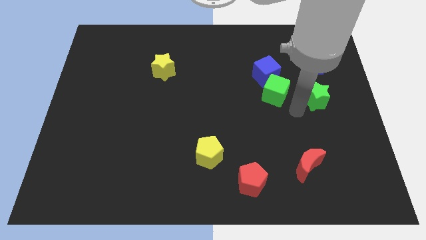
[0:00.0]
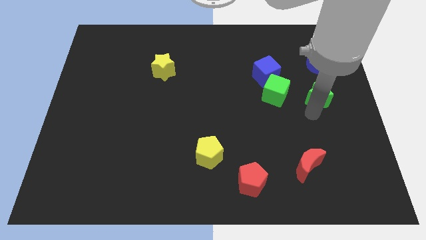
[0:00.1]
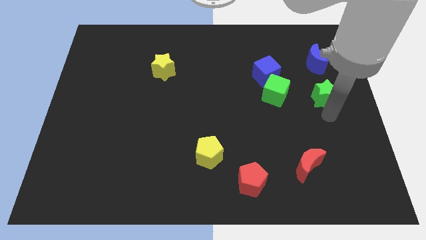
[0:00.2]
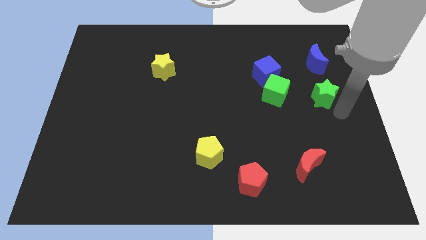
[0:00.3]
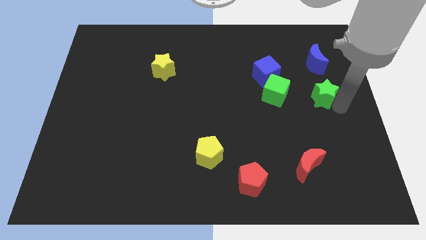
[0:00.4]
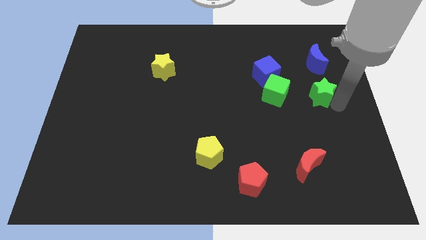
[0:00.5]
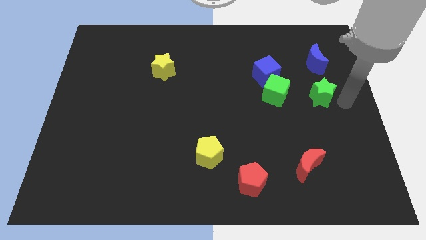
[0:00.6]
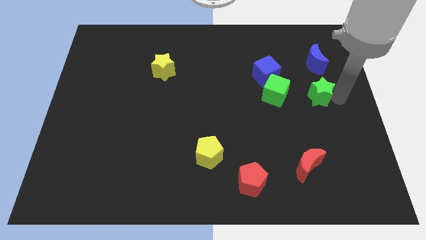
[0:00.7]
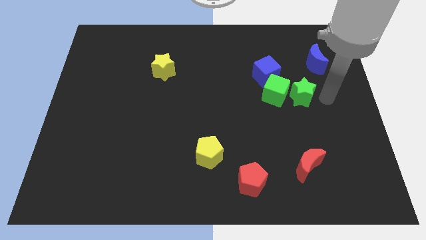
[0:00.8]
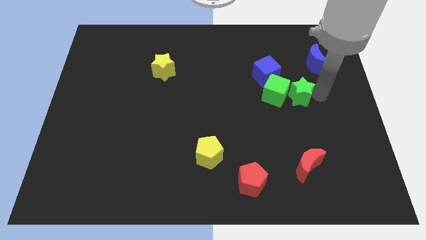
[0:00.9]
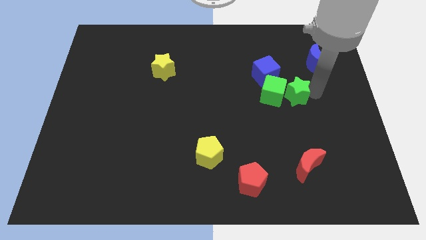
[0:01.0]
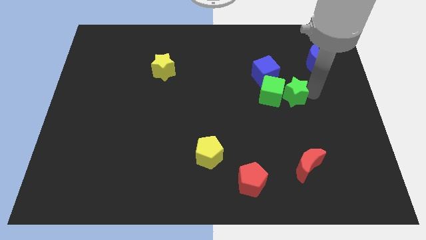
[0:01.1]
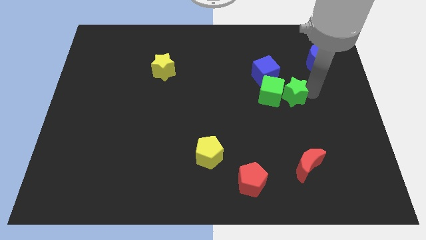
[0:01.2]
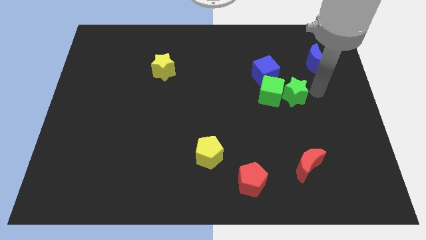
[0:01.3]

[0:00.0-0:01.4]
push green star above red crescent

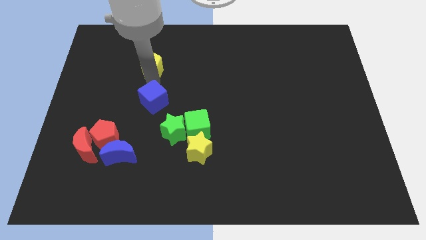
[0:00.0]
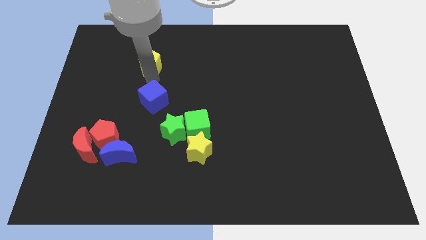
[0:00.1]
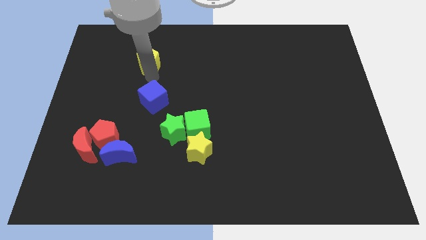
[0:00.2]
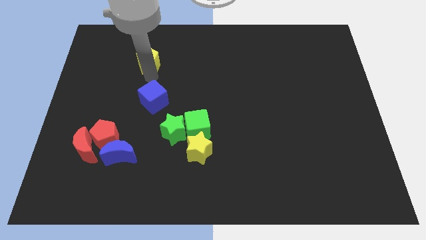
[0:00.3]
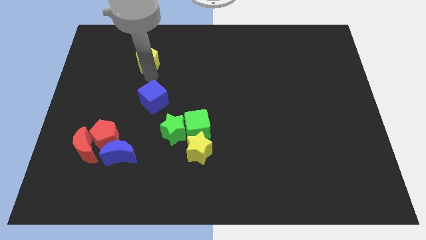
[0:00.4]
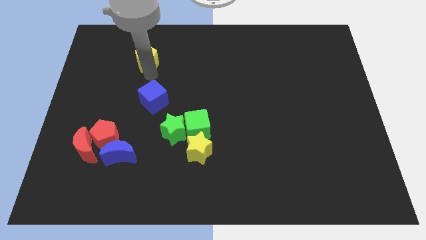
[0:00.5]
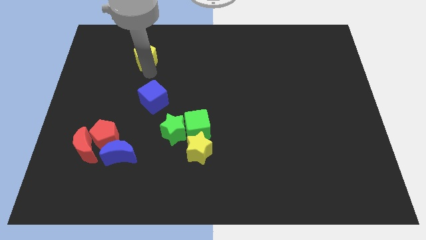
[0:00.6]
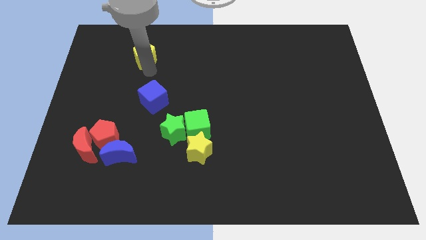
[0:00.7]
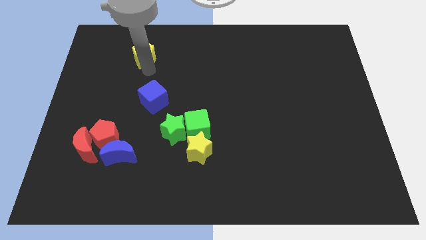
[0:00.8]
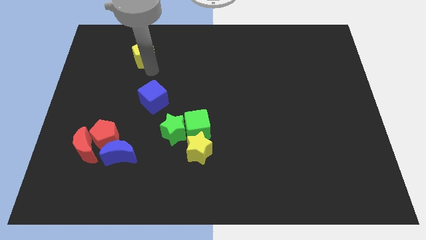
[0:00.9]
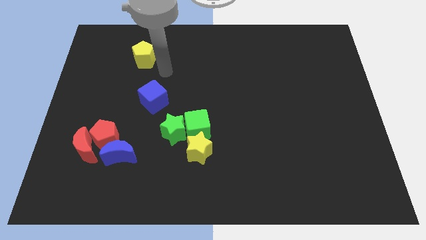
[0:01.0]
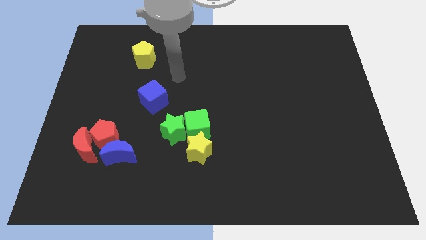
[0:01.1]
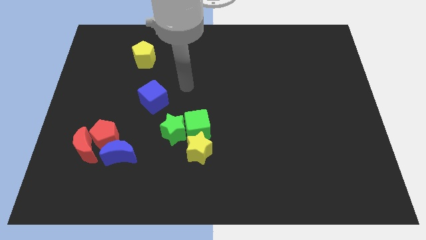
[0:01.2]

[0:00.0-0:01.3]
push the yellow pentagon to the top left side of the board

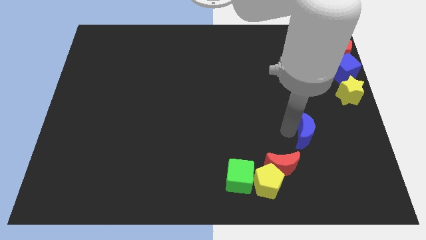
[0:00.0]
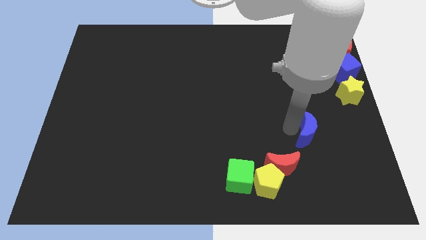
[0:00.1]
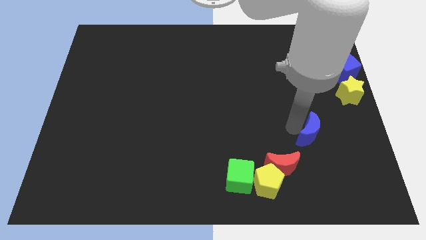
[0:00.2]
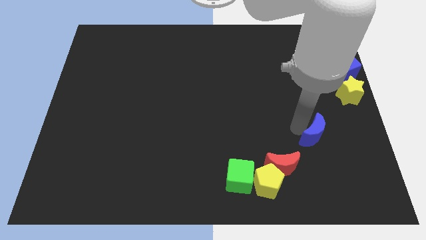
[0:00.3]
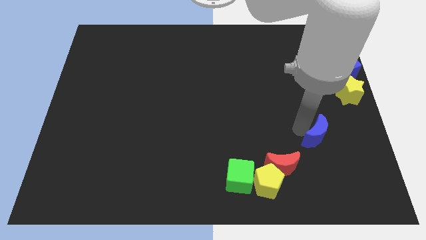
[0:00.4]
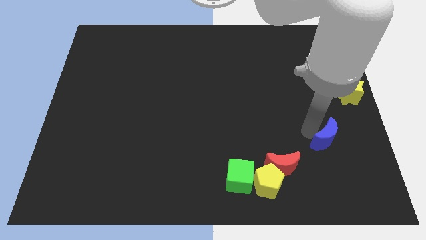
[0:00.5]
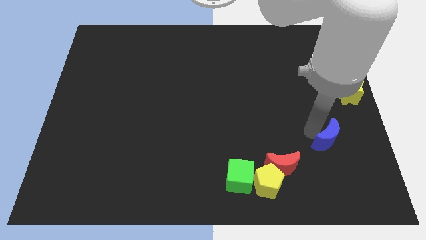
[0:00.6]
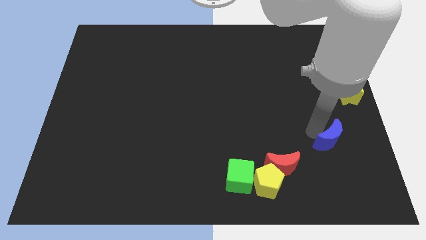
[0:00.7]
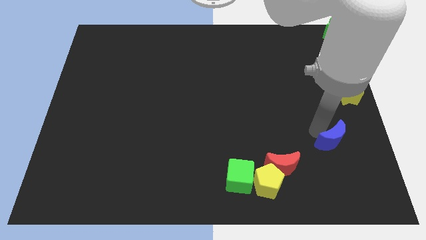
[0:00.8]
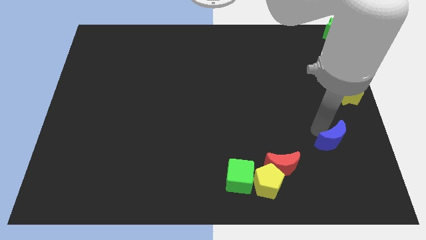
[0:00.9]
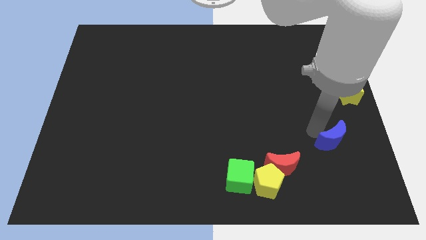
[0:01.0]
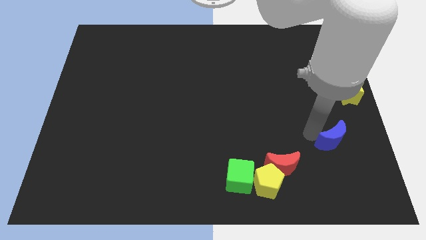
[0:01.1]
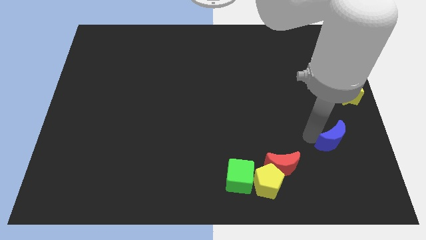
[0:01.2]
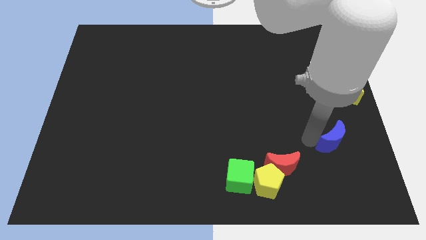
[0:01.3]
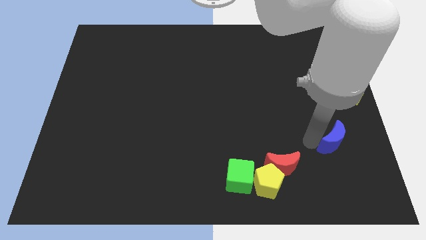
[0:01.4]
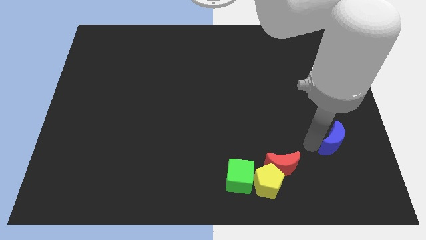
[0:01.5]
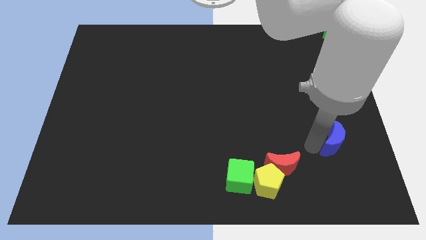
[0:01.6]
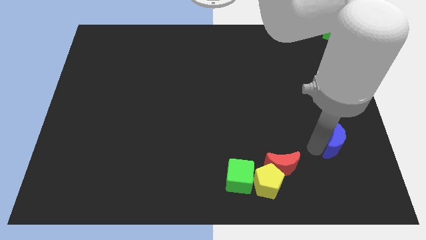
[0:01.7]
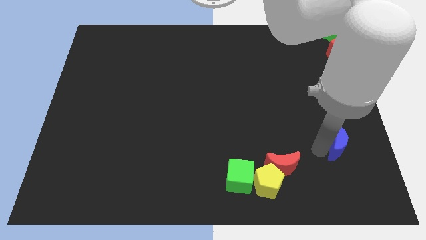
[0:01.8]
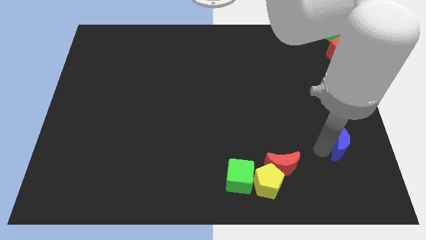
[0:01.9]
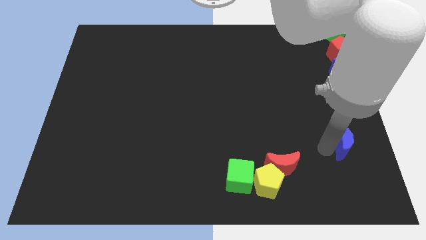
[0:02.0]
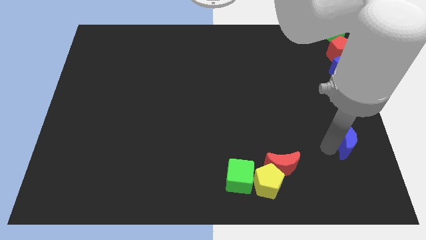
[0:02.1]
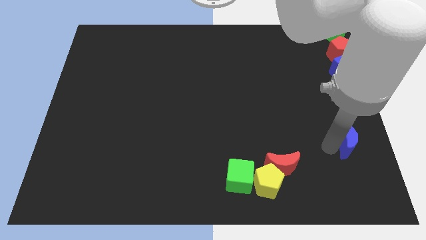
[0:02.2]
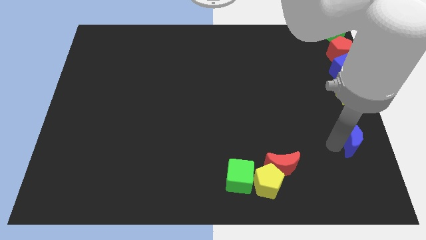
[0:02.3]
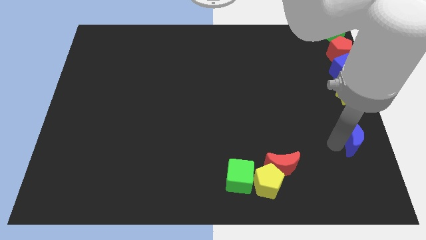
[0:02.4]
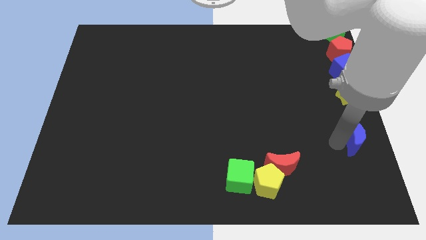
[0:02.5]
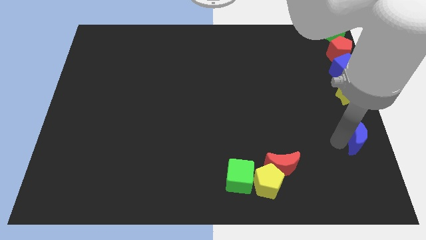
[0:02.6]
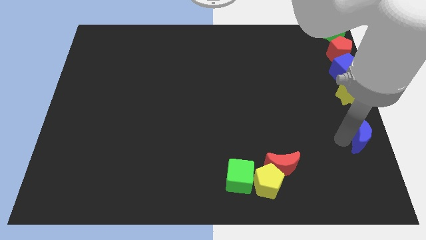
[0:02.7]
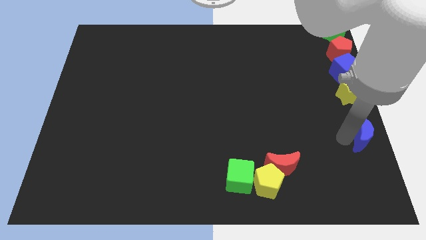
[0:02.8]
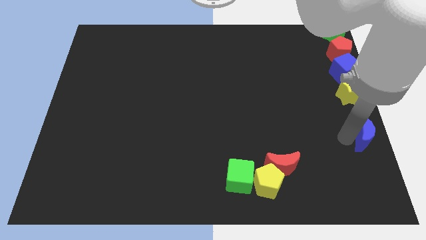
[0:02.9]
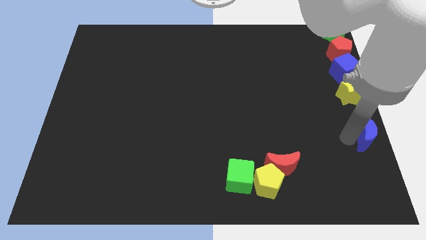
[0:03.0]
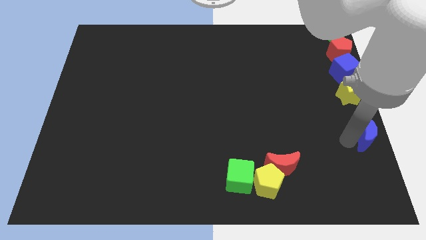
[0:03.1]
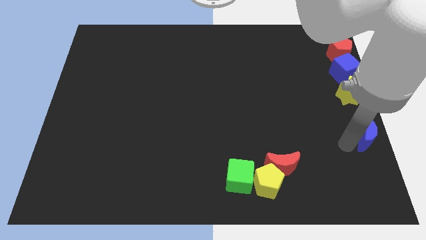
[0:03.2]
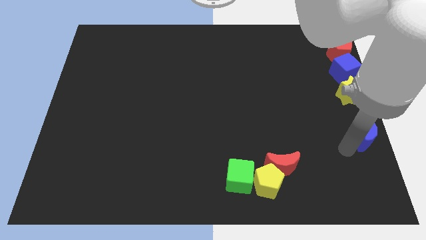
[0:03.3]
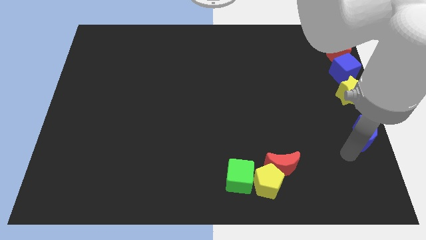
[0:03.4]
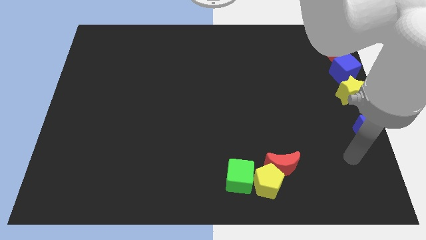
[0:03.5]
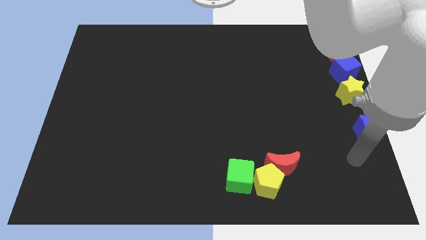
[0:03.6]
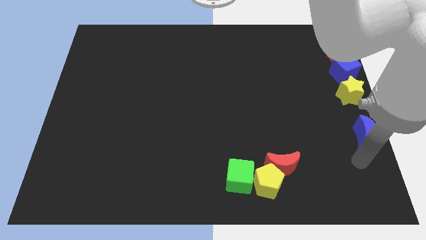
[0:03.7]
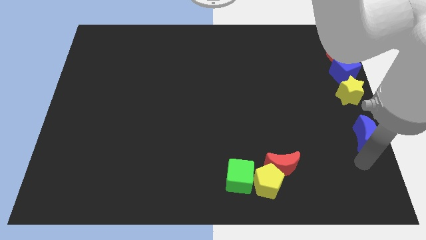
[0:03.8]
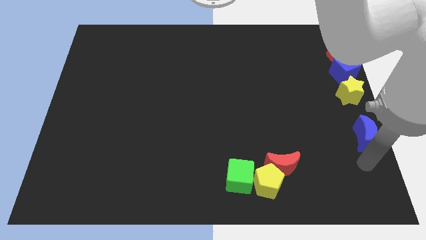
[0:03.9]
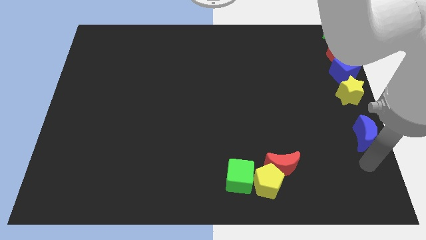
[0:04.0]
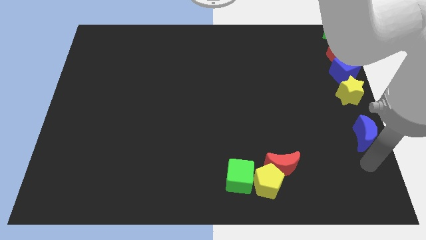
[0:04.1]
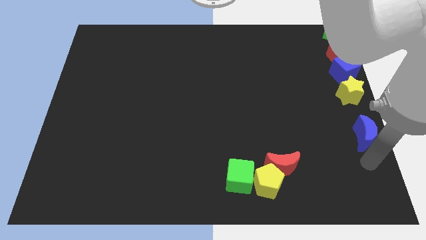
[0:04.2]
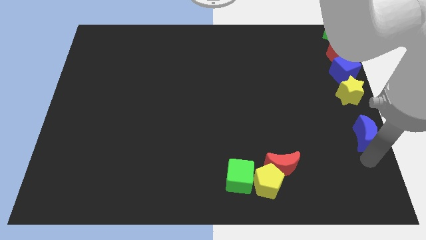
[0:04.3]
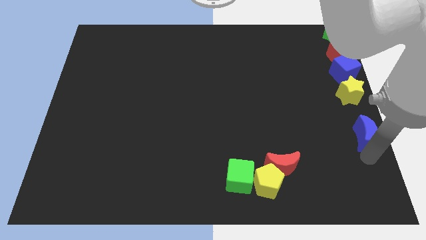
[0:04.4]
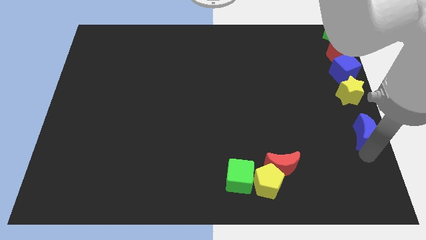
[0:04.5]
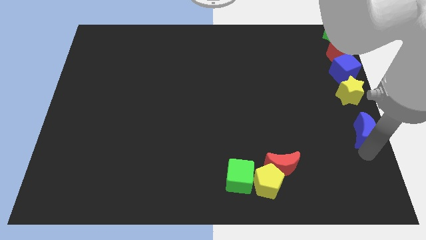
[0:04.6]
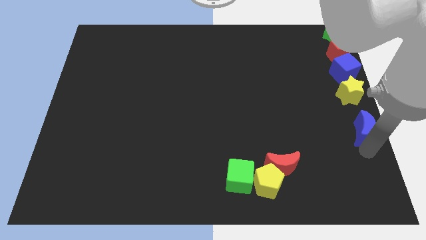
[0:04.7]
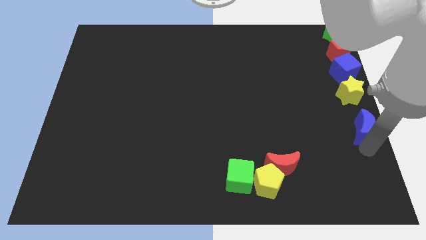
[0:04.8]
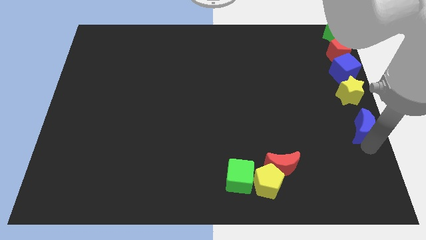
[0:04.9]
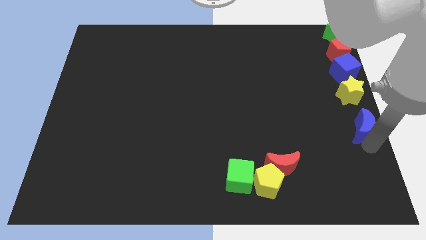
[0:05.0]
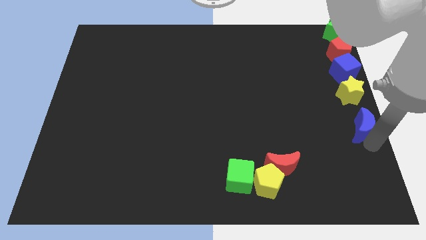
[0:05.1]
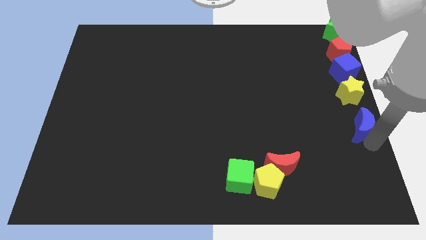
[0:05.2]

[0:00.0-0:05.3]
place the blue crescent below the yellow star to form a vertical line

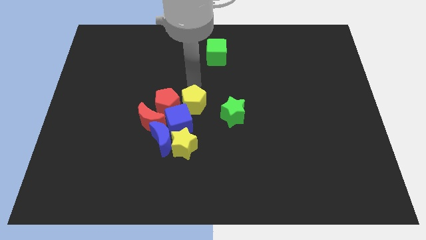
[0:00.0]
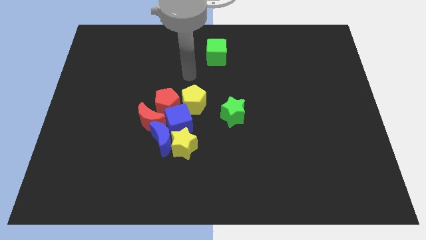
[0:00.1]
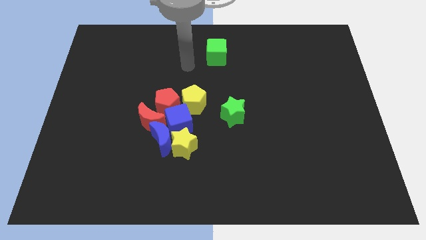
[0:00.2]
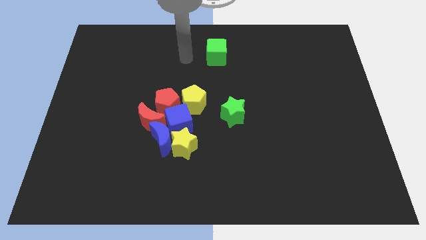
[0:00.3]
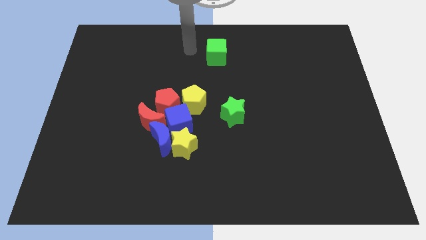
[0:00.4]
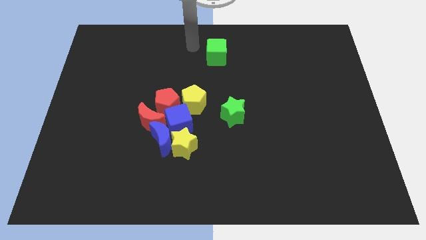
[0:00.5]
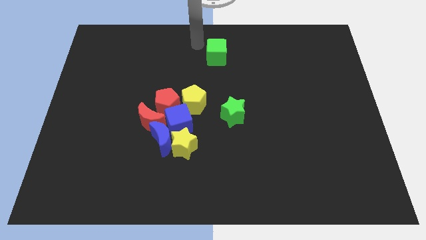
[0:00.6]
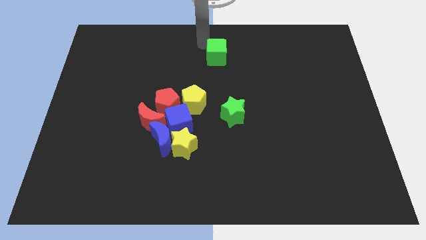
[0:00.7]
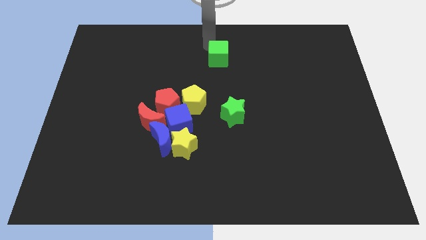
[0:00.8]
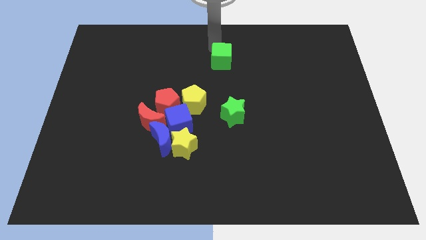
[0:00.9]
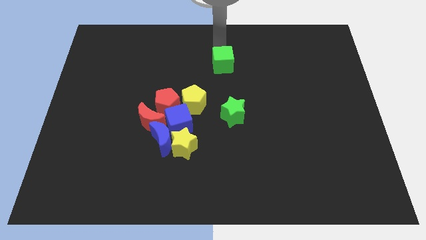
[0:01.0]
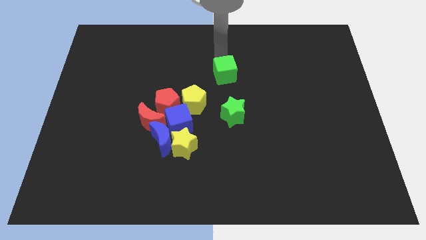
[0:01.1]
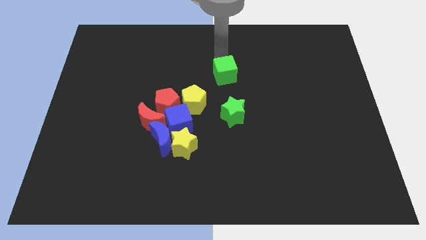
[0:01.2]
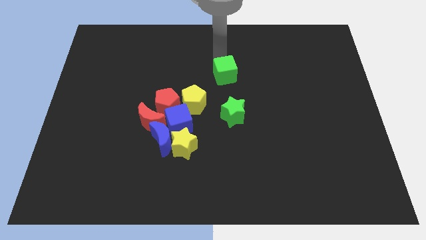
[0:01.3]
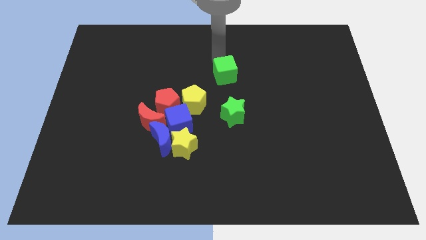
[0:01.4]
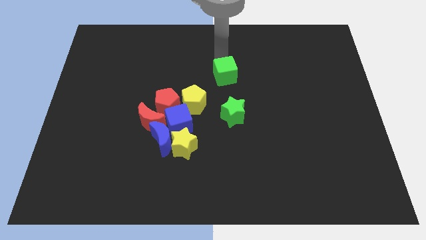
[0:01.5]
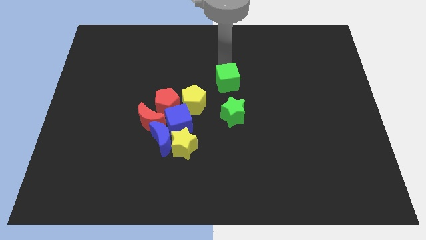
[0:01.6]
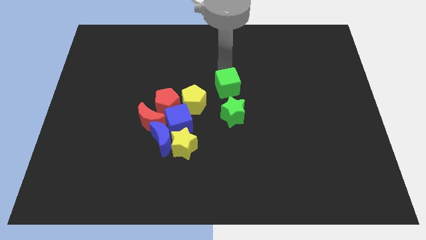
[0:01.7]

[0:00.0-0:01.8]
move the green cube slightly to the bottom
